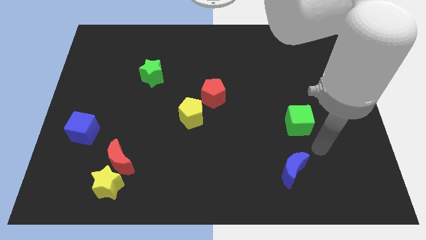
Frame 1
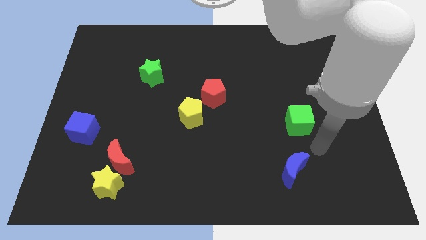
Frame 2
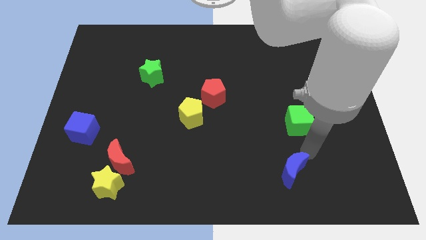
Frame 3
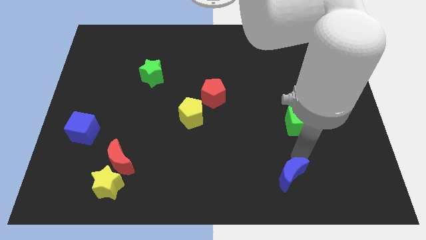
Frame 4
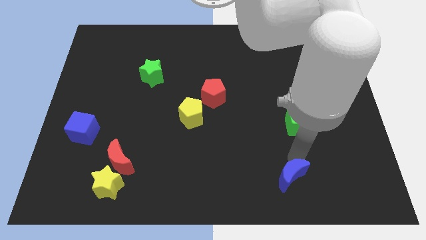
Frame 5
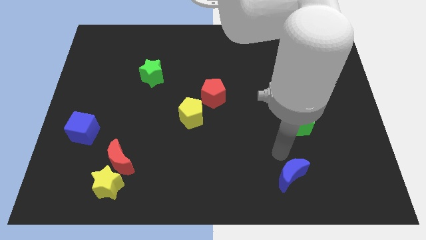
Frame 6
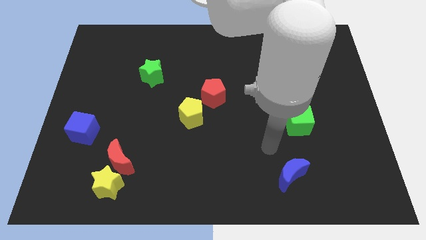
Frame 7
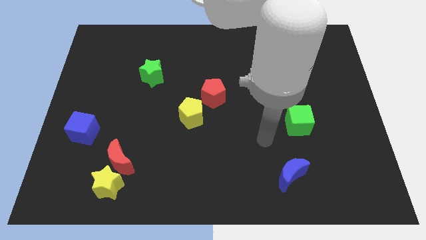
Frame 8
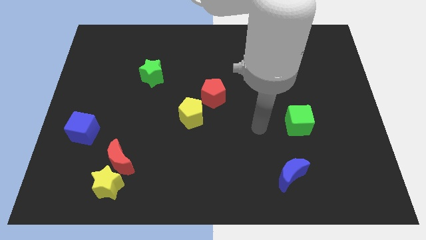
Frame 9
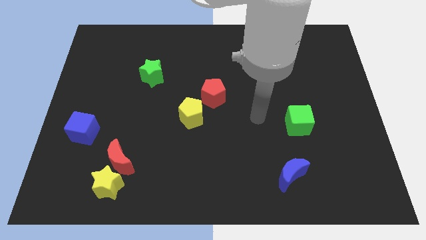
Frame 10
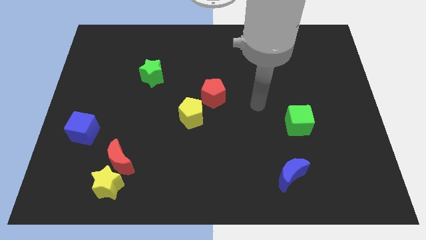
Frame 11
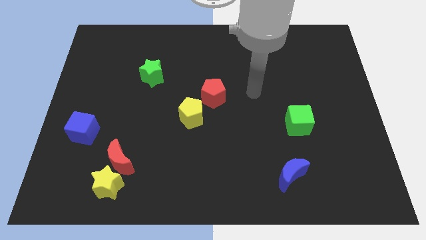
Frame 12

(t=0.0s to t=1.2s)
tap the blue crescent

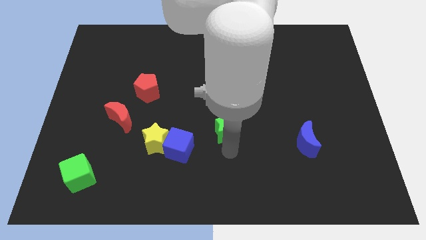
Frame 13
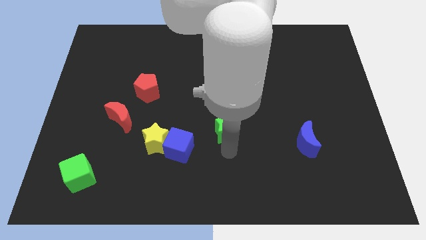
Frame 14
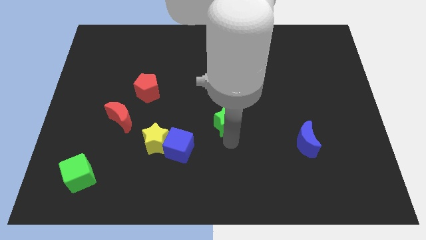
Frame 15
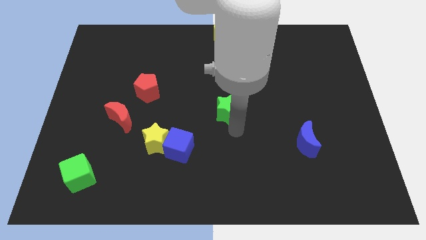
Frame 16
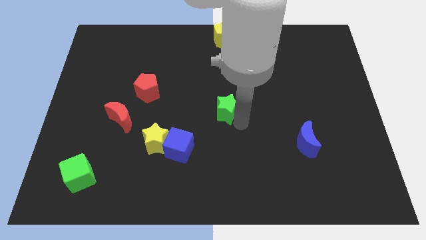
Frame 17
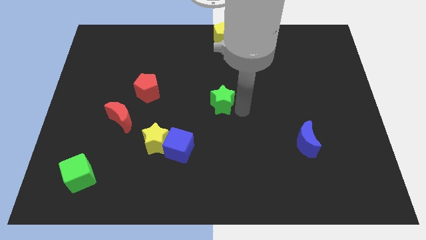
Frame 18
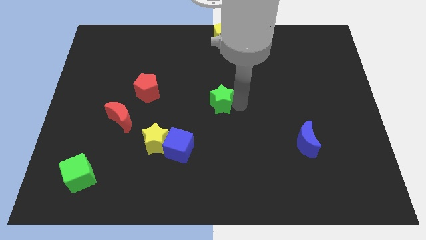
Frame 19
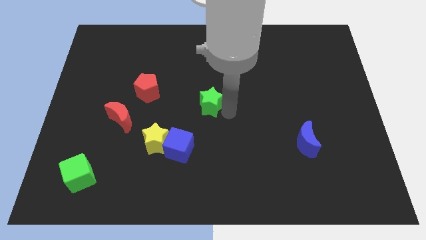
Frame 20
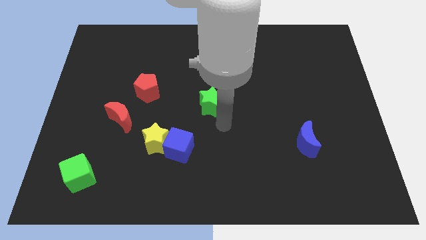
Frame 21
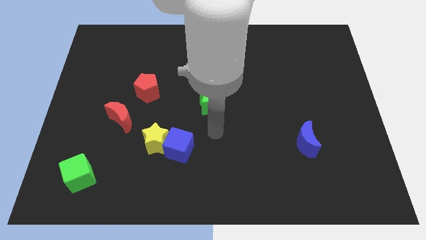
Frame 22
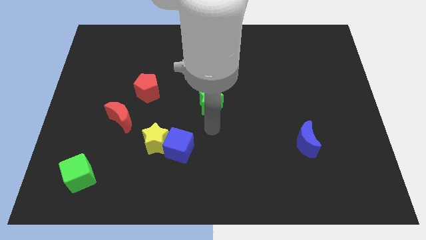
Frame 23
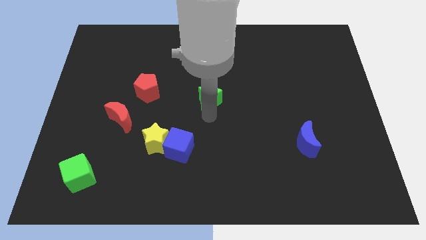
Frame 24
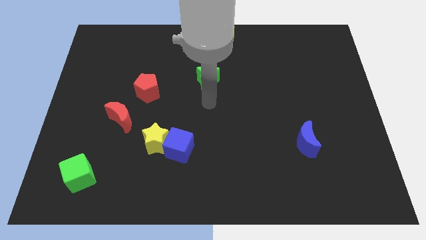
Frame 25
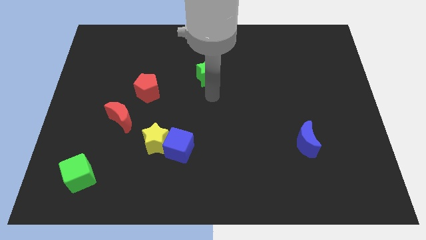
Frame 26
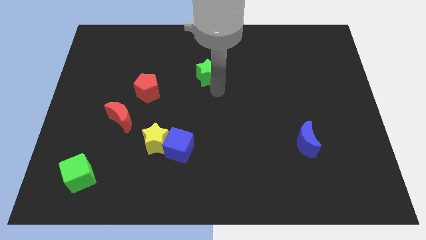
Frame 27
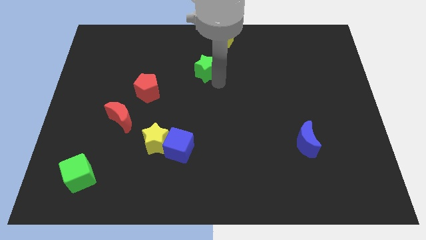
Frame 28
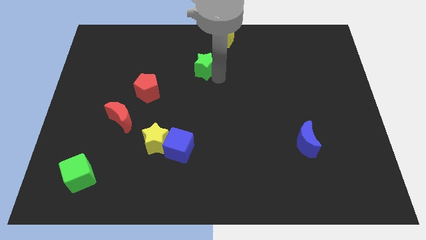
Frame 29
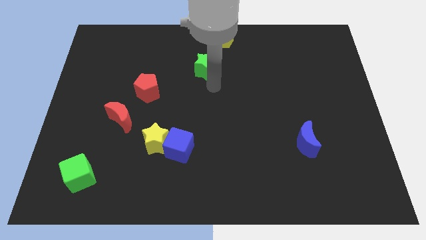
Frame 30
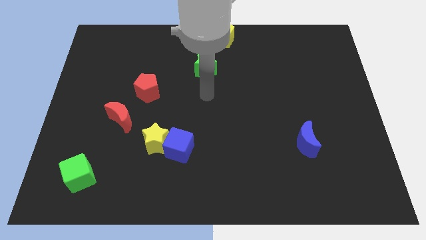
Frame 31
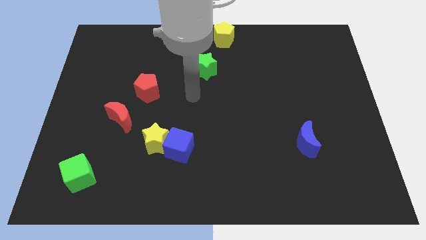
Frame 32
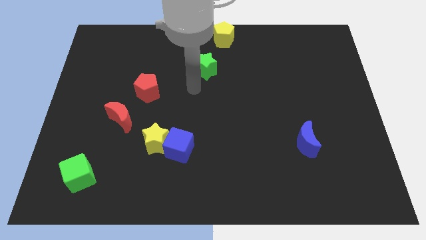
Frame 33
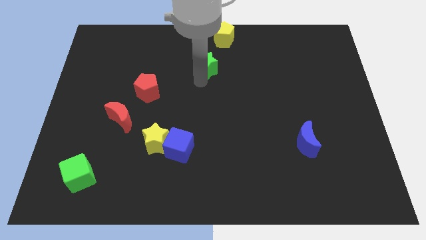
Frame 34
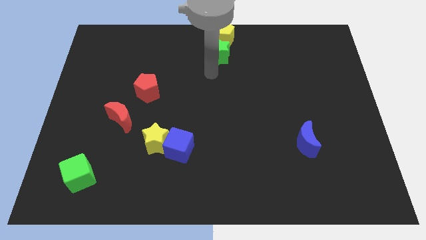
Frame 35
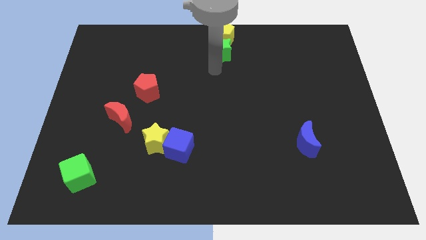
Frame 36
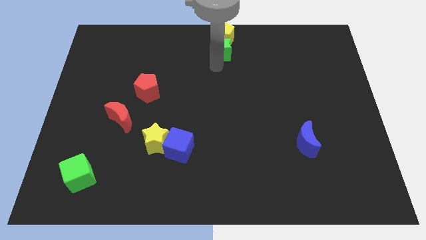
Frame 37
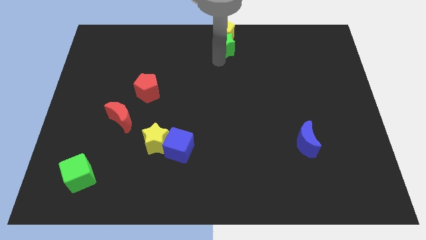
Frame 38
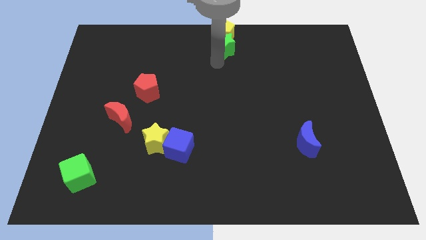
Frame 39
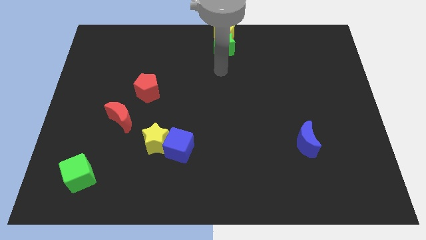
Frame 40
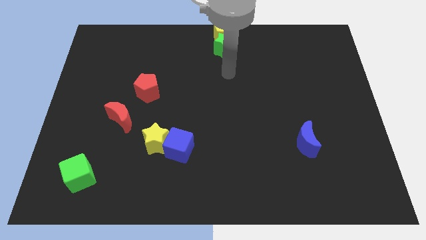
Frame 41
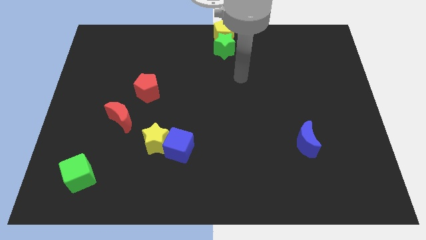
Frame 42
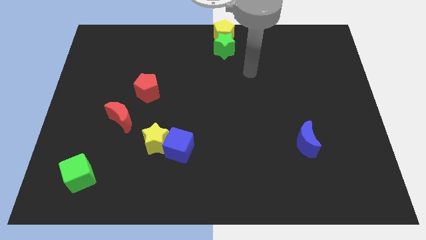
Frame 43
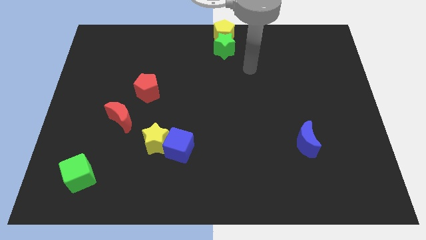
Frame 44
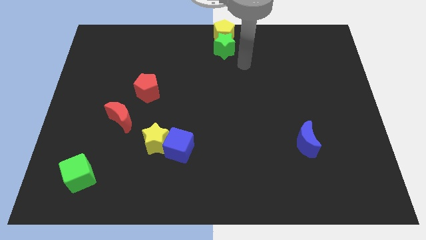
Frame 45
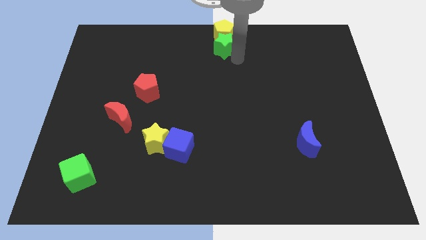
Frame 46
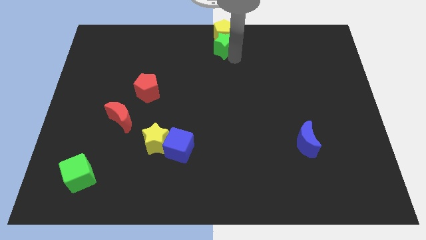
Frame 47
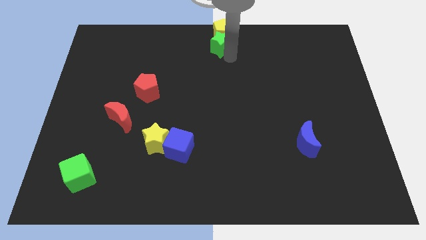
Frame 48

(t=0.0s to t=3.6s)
move your arm towards the left side of the green star

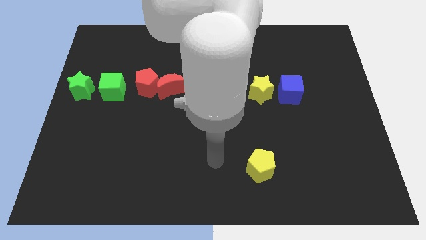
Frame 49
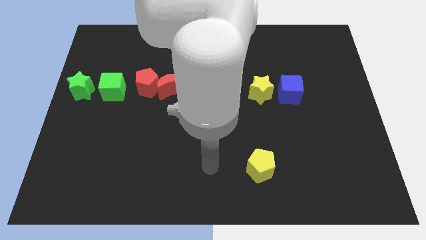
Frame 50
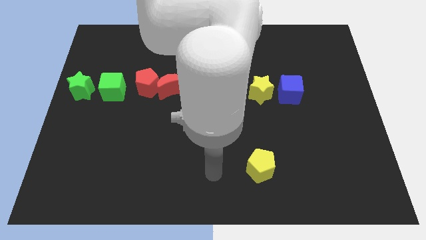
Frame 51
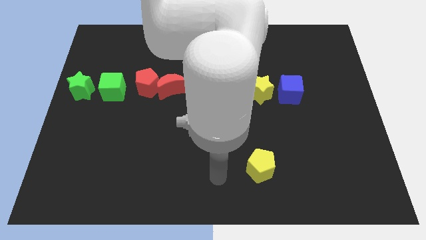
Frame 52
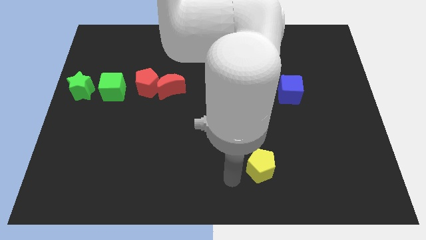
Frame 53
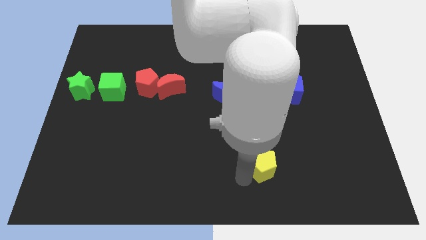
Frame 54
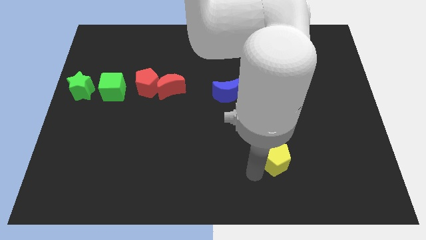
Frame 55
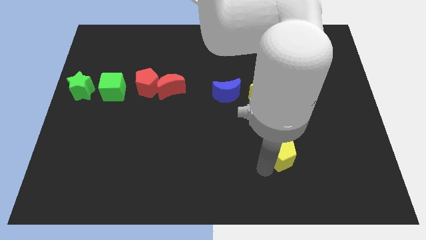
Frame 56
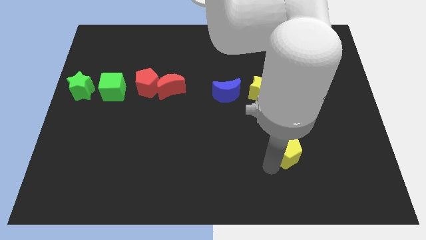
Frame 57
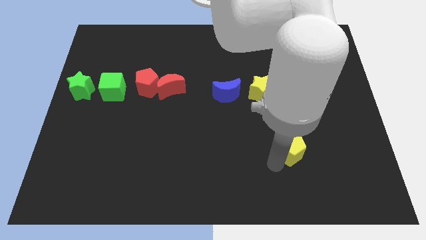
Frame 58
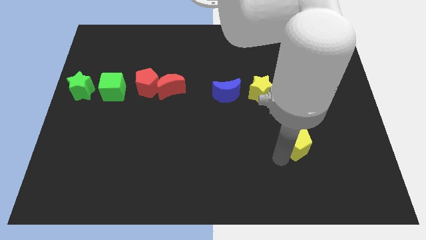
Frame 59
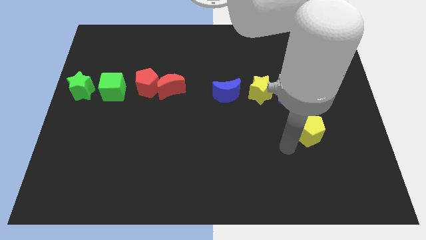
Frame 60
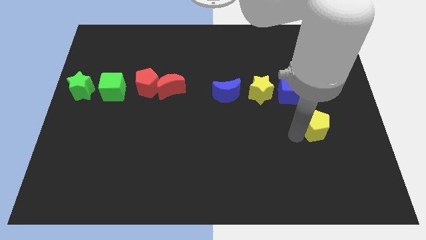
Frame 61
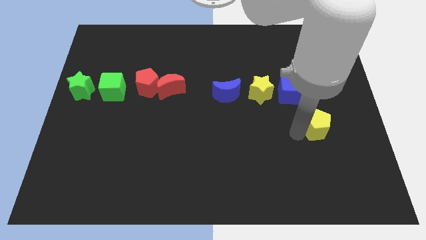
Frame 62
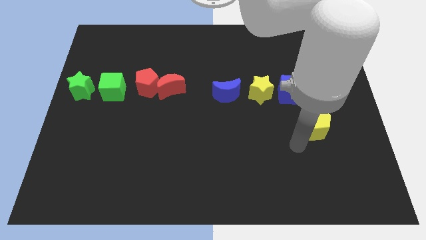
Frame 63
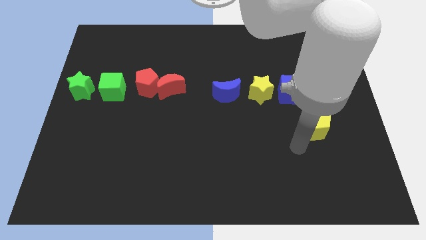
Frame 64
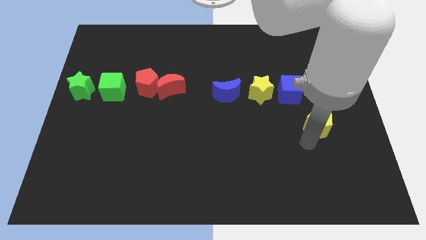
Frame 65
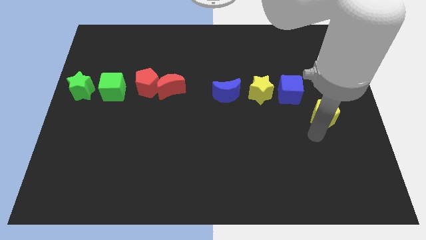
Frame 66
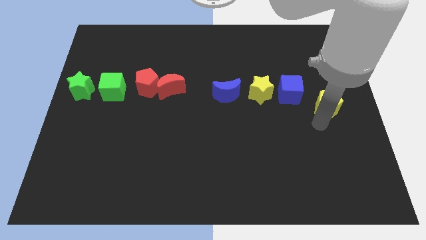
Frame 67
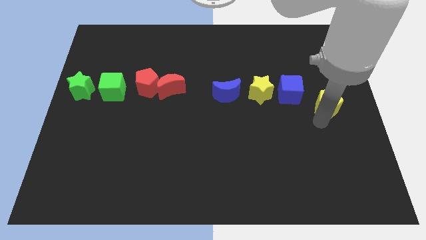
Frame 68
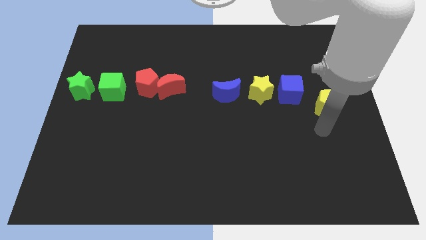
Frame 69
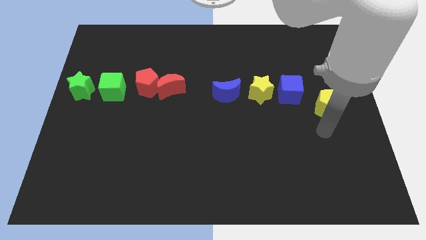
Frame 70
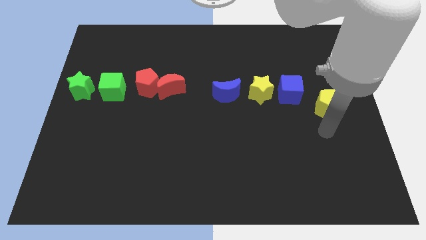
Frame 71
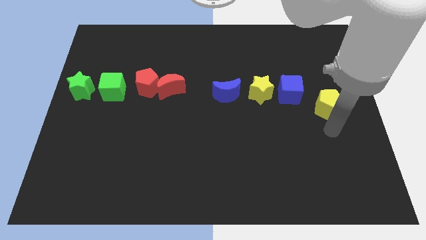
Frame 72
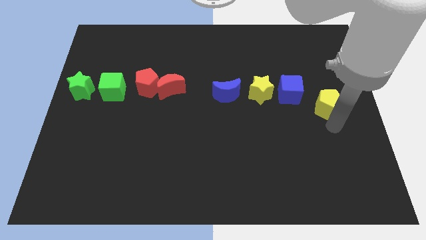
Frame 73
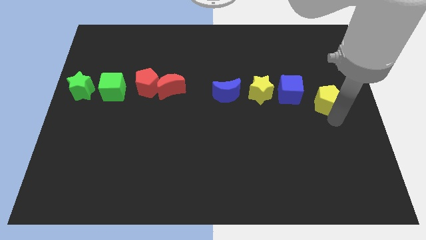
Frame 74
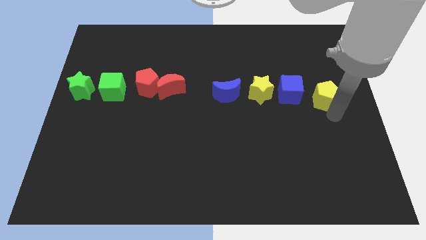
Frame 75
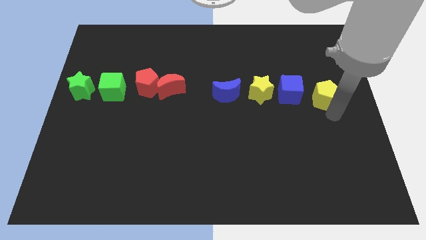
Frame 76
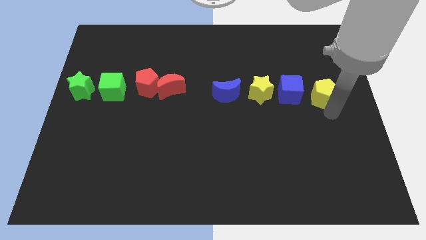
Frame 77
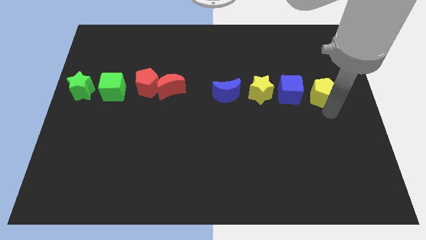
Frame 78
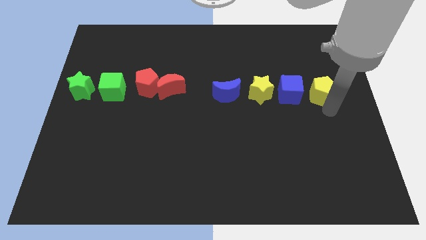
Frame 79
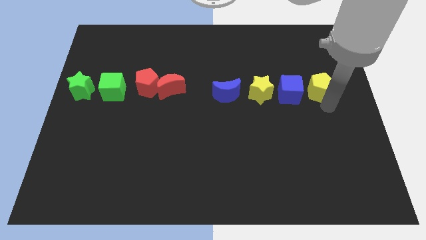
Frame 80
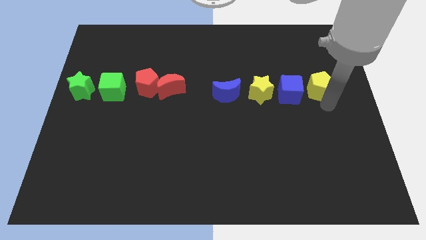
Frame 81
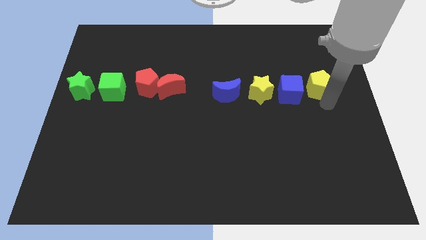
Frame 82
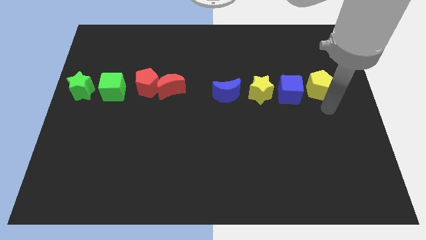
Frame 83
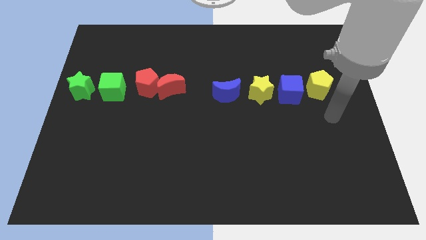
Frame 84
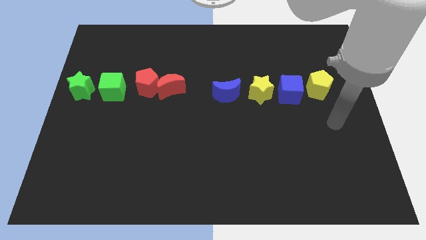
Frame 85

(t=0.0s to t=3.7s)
place the yellow pentagon to the right of the blue cube

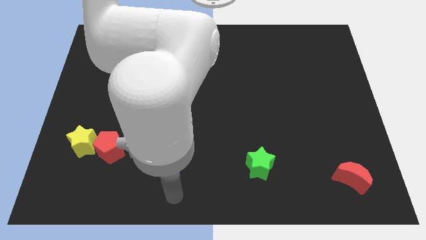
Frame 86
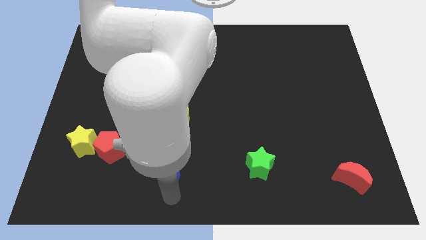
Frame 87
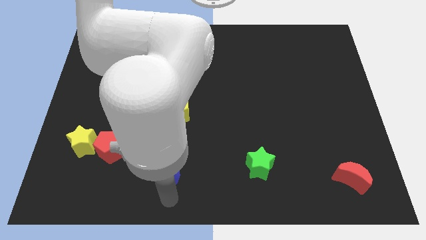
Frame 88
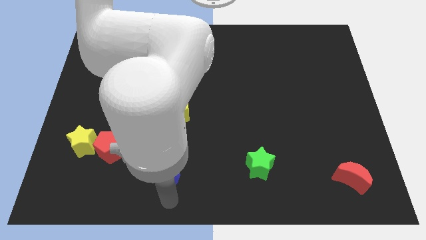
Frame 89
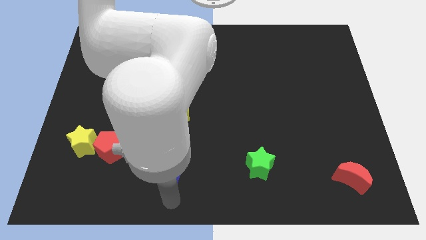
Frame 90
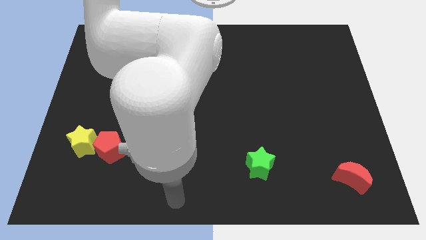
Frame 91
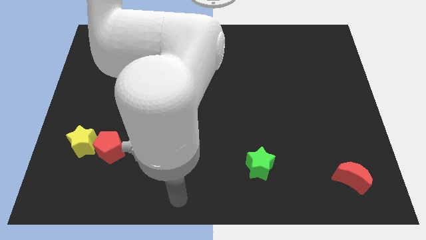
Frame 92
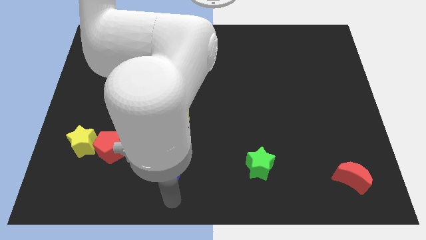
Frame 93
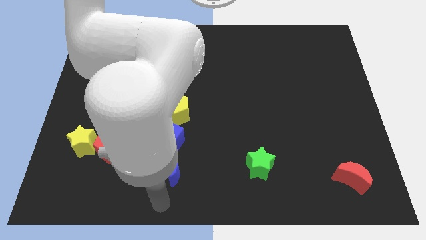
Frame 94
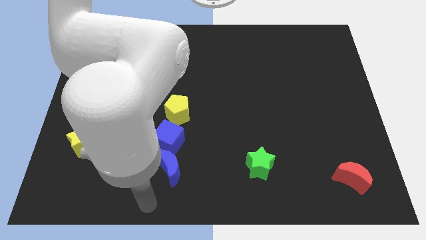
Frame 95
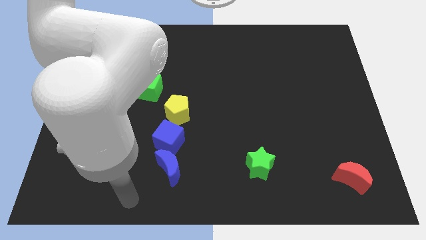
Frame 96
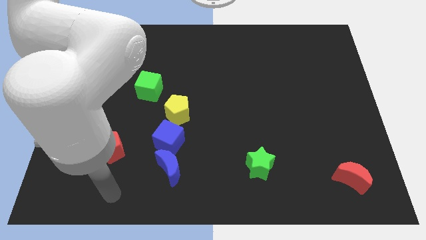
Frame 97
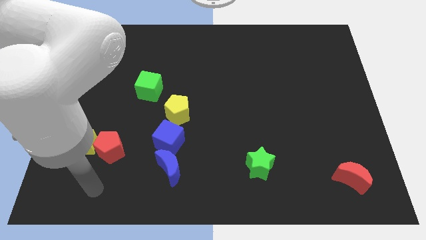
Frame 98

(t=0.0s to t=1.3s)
move your arm away from blue moon
